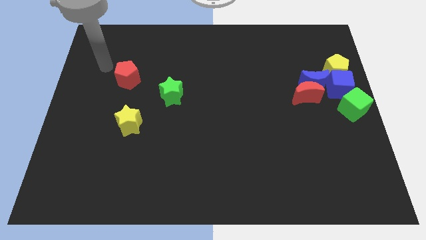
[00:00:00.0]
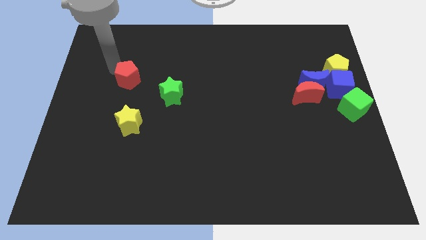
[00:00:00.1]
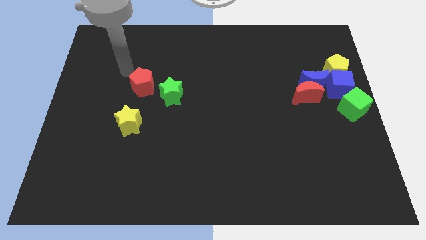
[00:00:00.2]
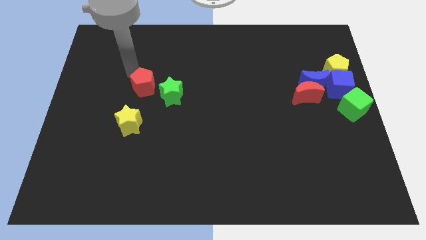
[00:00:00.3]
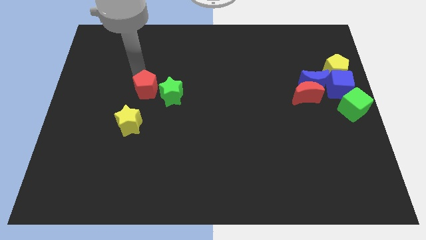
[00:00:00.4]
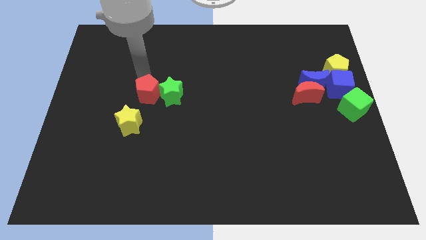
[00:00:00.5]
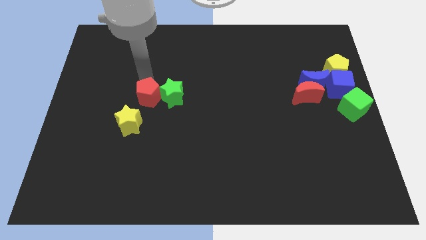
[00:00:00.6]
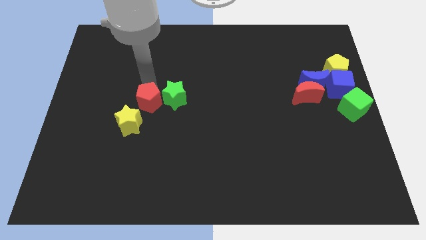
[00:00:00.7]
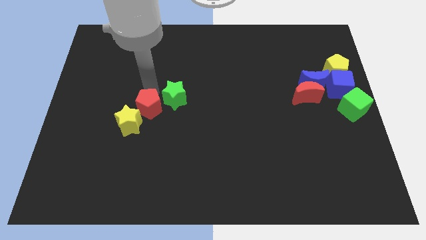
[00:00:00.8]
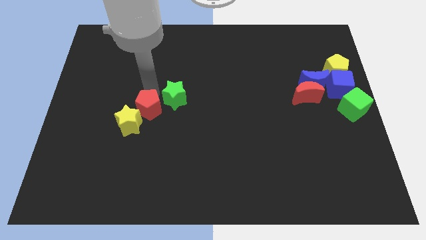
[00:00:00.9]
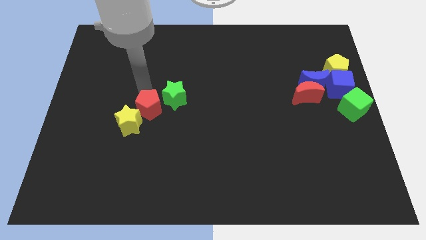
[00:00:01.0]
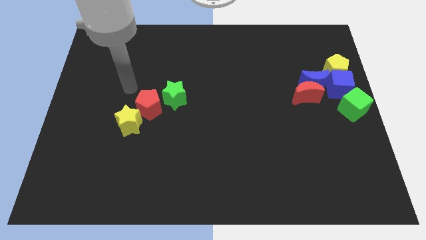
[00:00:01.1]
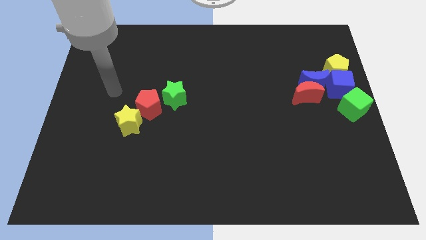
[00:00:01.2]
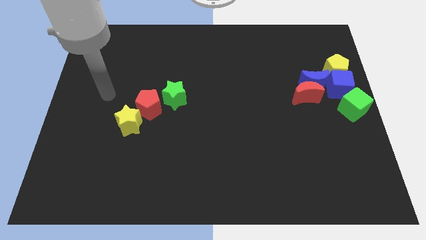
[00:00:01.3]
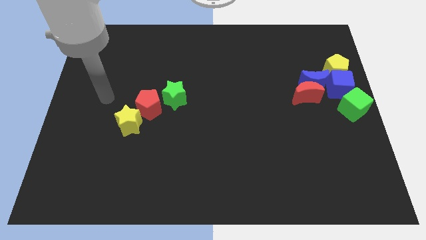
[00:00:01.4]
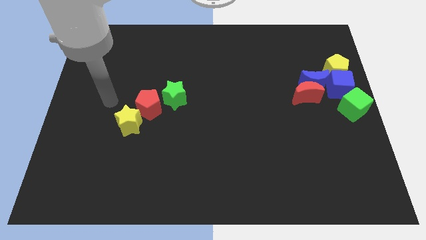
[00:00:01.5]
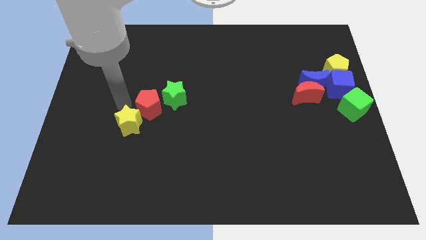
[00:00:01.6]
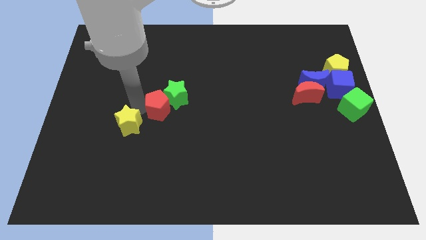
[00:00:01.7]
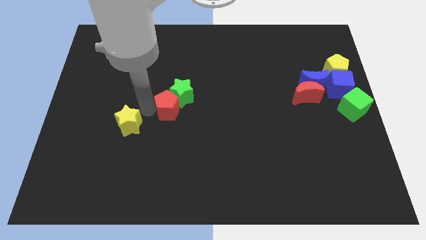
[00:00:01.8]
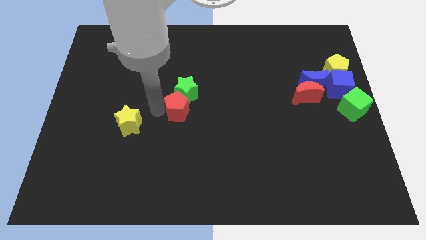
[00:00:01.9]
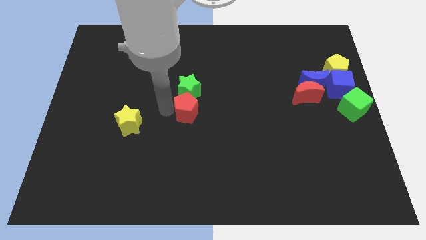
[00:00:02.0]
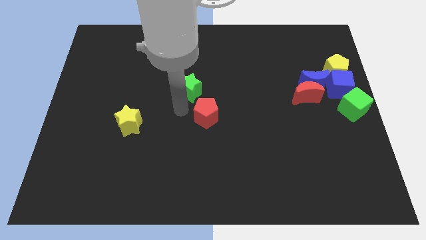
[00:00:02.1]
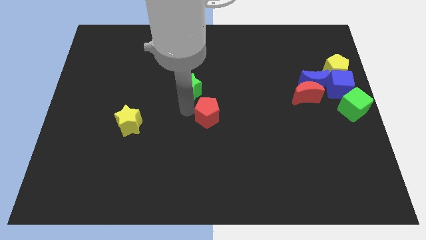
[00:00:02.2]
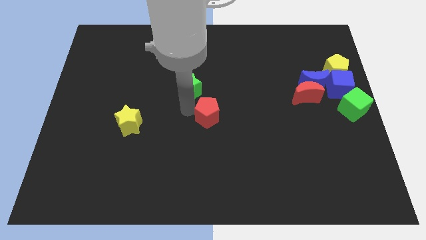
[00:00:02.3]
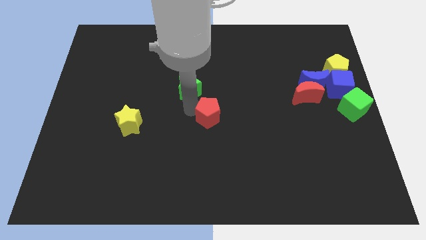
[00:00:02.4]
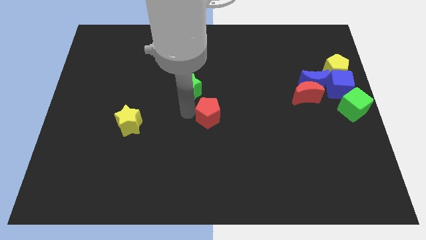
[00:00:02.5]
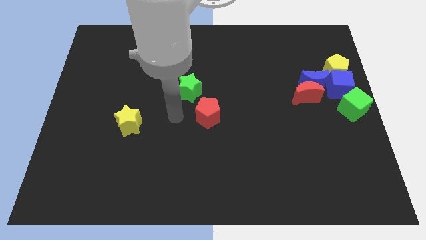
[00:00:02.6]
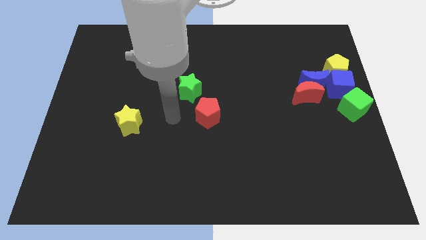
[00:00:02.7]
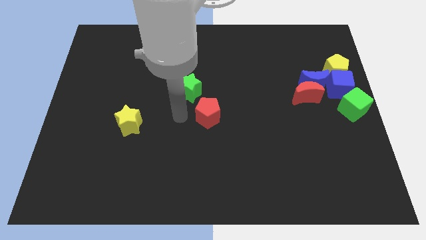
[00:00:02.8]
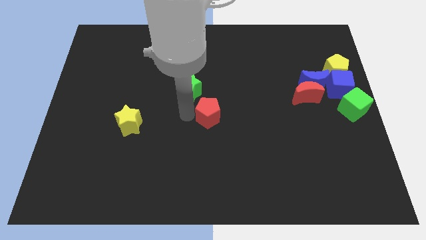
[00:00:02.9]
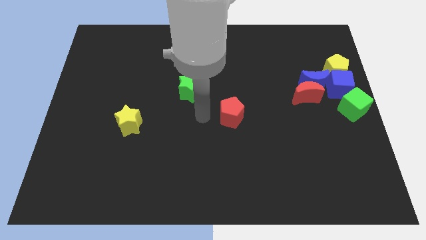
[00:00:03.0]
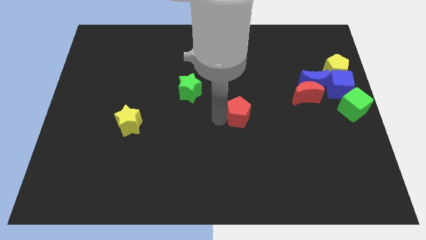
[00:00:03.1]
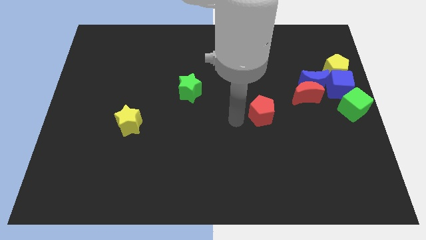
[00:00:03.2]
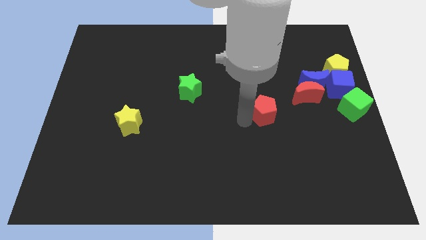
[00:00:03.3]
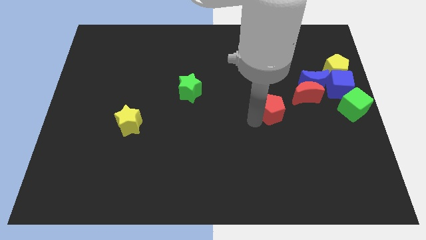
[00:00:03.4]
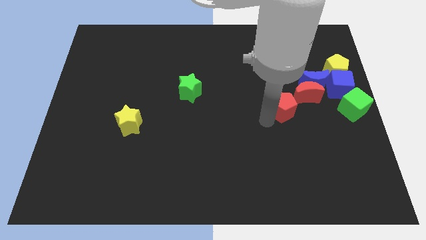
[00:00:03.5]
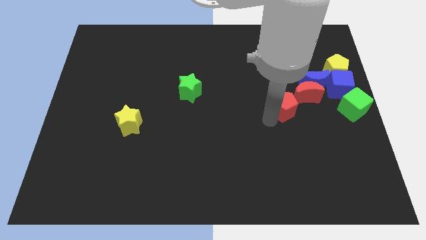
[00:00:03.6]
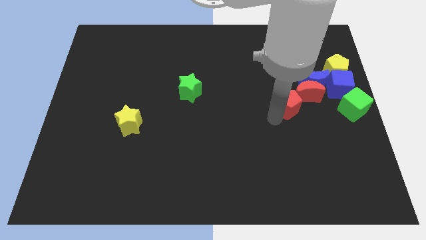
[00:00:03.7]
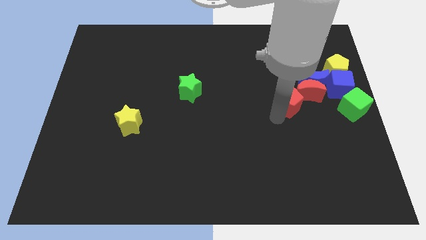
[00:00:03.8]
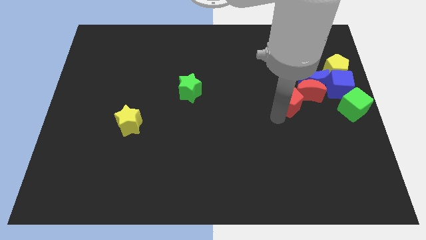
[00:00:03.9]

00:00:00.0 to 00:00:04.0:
move red pentagon into red crescent

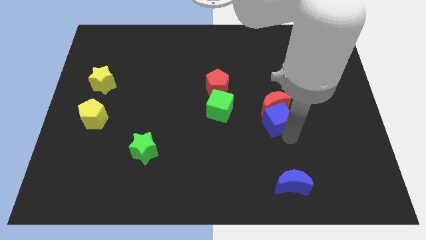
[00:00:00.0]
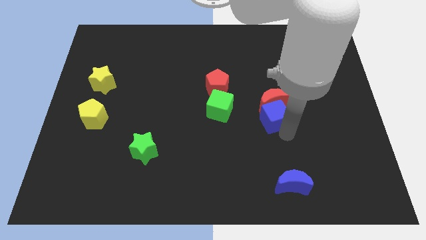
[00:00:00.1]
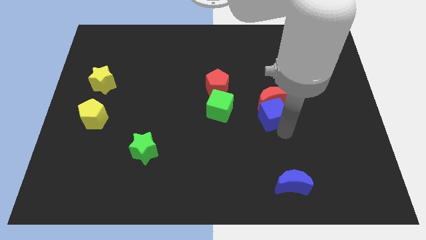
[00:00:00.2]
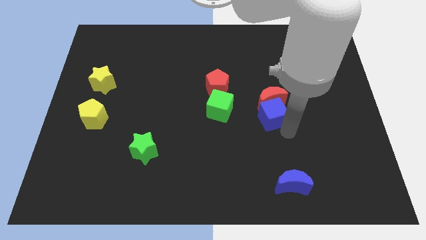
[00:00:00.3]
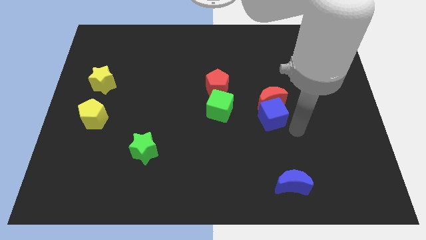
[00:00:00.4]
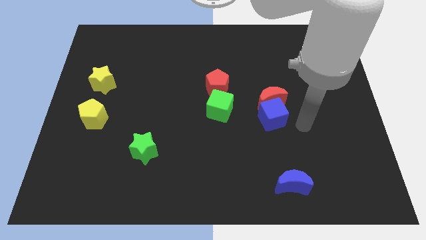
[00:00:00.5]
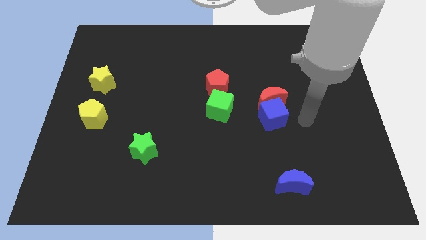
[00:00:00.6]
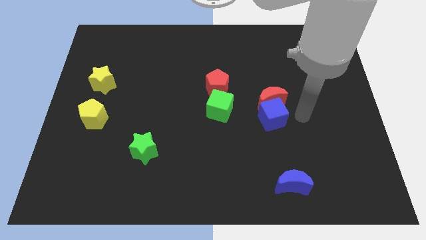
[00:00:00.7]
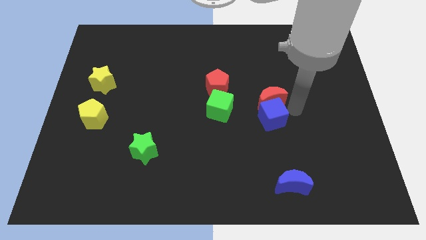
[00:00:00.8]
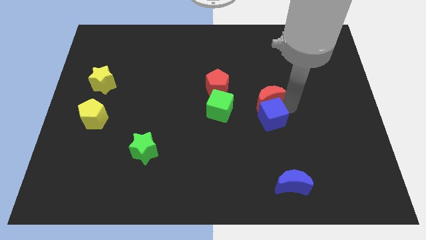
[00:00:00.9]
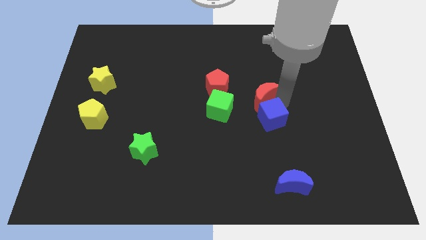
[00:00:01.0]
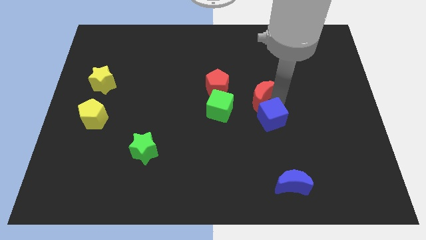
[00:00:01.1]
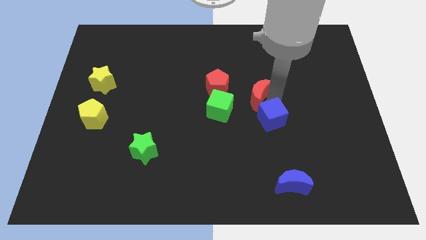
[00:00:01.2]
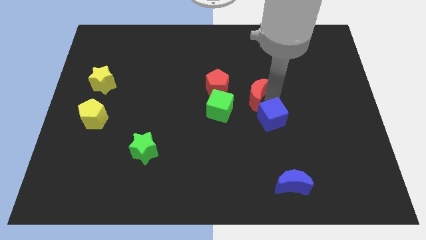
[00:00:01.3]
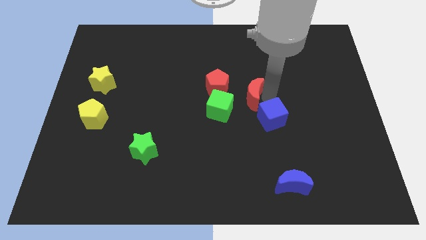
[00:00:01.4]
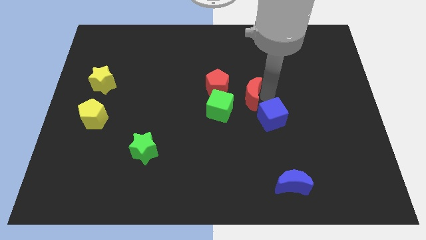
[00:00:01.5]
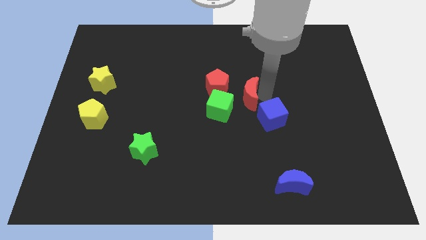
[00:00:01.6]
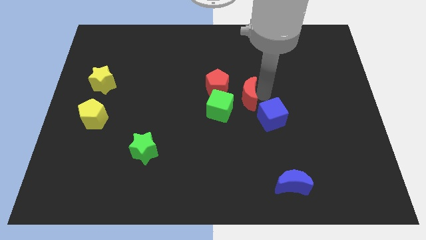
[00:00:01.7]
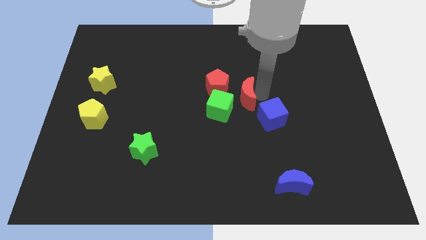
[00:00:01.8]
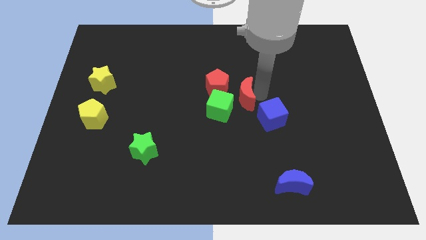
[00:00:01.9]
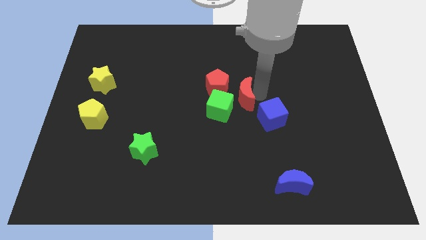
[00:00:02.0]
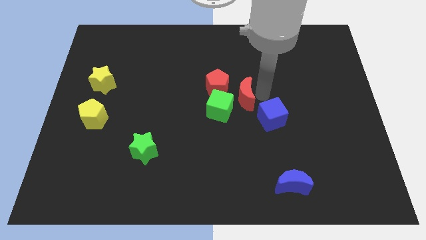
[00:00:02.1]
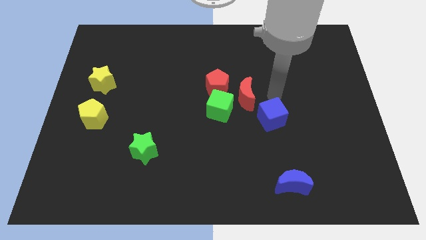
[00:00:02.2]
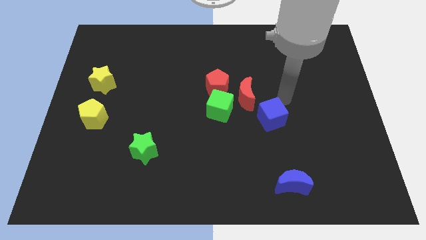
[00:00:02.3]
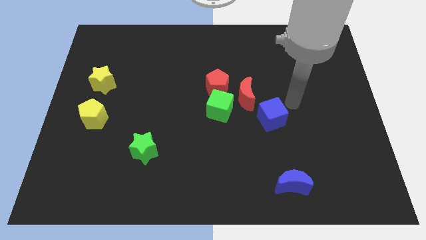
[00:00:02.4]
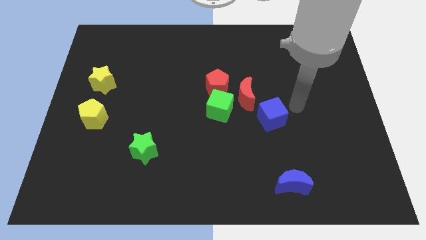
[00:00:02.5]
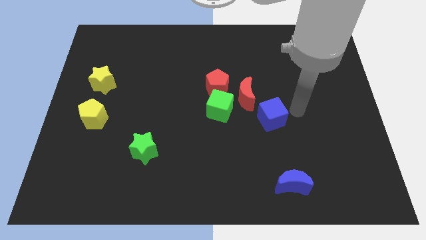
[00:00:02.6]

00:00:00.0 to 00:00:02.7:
slightly move red crescent to the right side of the red pentagon

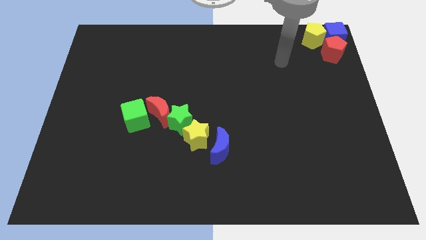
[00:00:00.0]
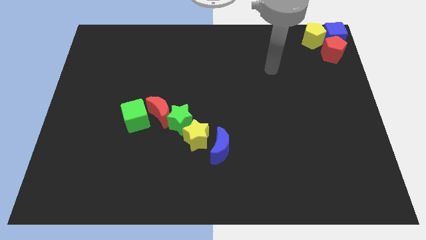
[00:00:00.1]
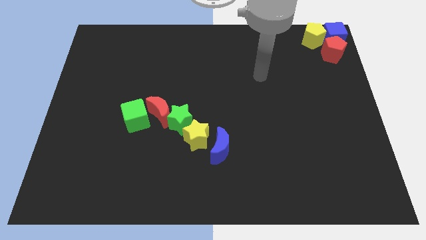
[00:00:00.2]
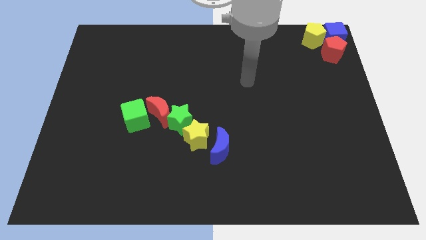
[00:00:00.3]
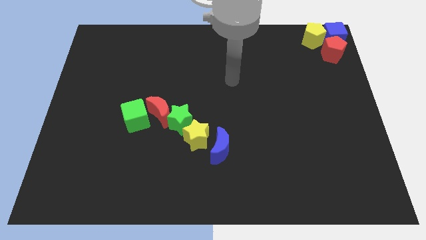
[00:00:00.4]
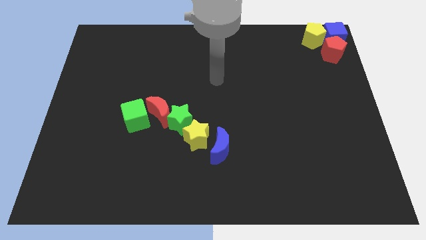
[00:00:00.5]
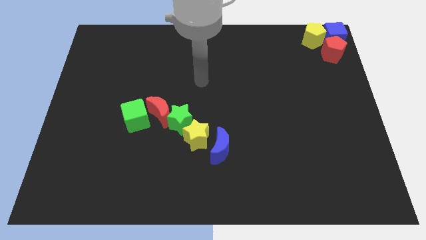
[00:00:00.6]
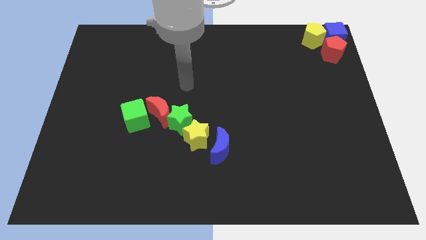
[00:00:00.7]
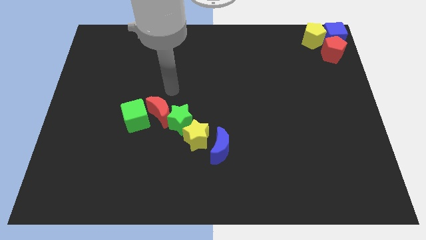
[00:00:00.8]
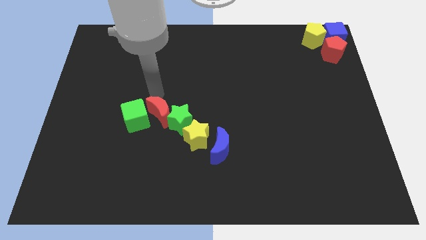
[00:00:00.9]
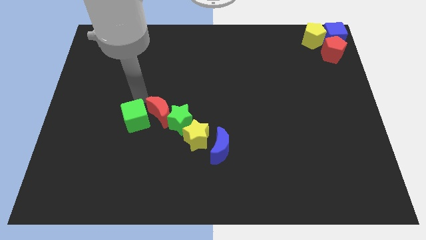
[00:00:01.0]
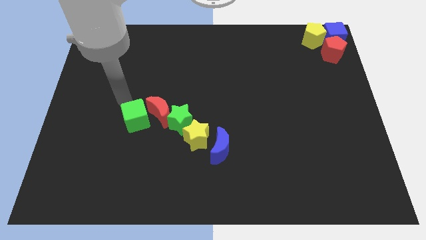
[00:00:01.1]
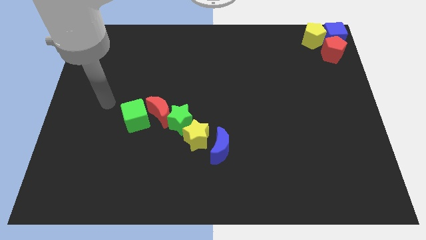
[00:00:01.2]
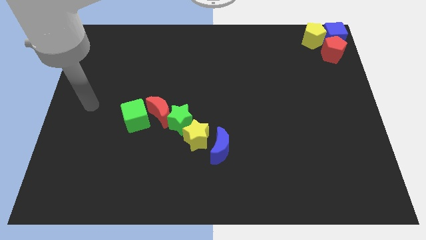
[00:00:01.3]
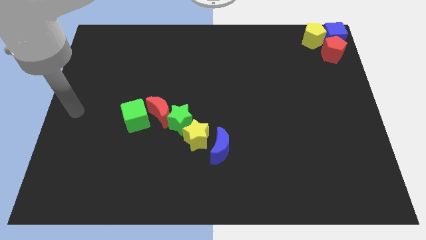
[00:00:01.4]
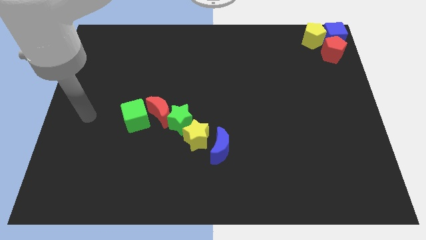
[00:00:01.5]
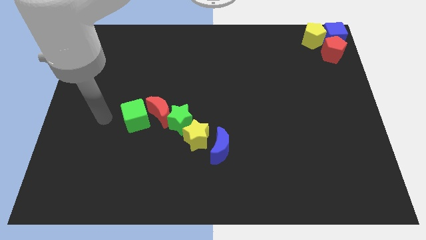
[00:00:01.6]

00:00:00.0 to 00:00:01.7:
point the arm to the left of the green cube

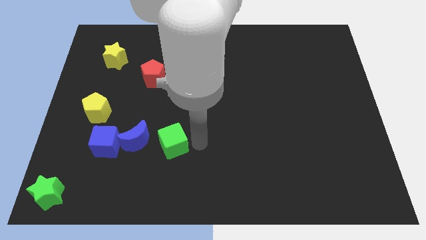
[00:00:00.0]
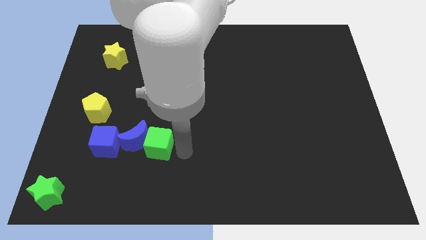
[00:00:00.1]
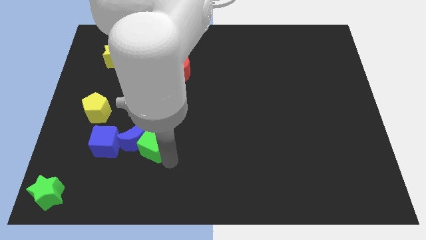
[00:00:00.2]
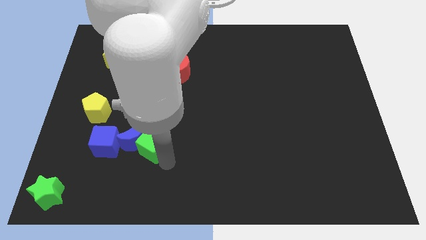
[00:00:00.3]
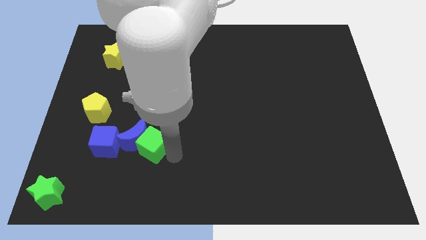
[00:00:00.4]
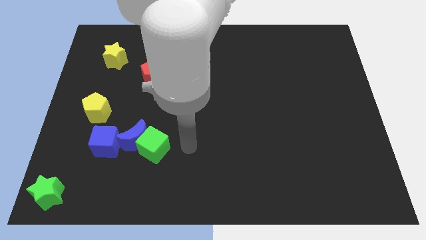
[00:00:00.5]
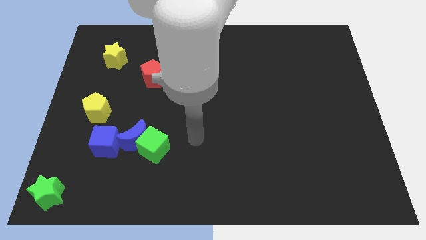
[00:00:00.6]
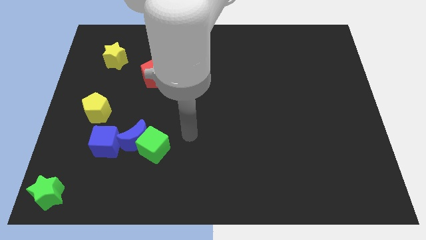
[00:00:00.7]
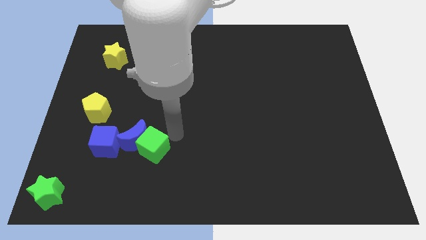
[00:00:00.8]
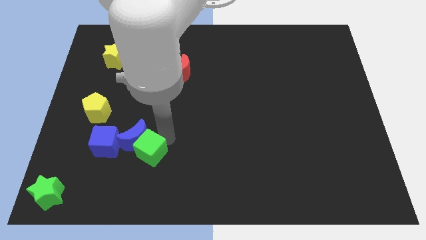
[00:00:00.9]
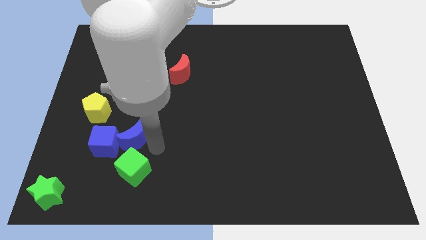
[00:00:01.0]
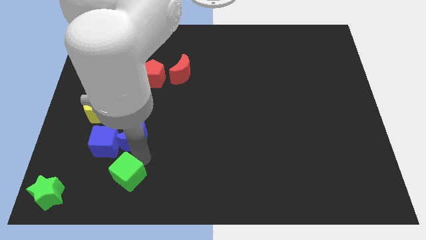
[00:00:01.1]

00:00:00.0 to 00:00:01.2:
place the green cube below the blue moon
